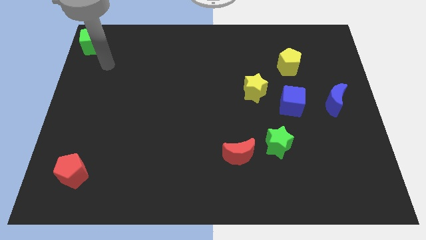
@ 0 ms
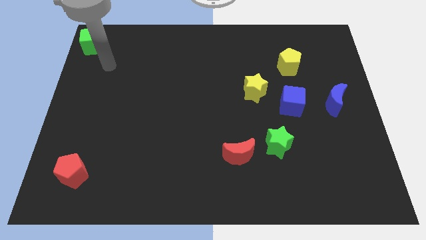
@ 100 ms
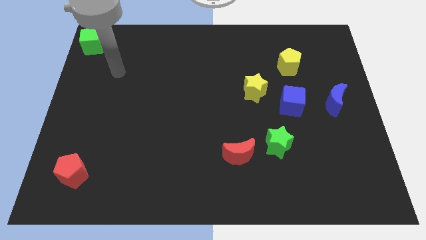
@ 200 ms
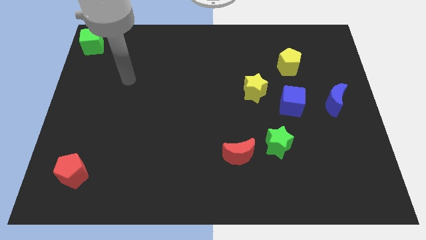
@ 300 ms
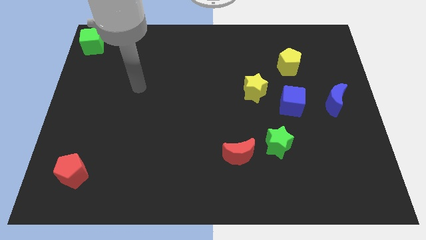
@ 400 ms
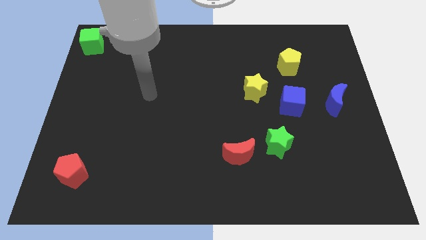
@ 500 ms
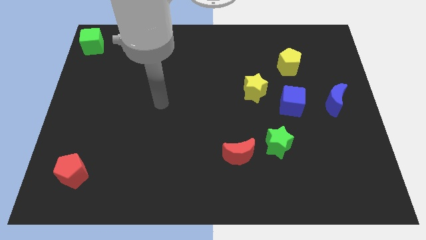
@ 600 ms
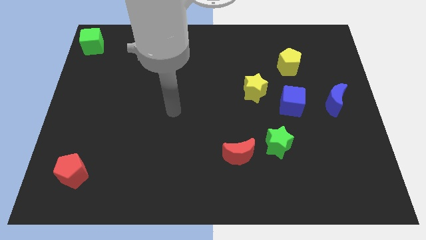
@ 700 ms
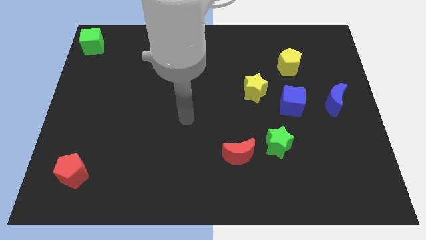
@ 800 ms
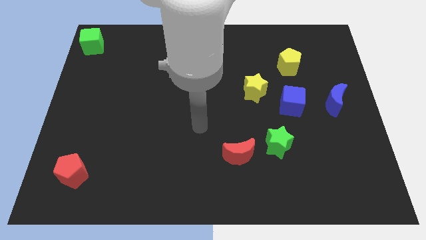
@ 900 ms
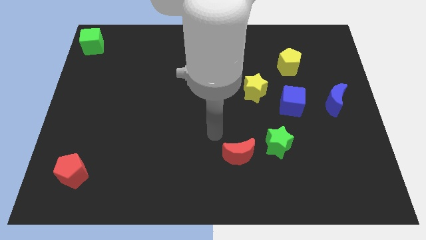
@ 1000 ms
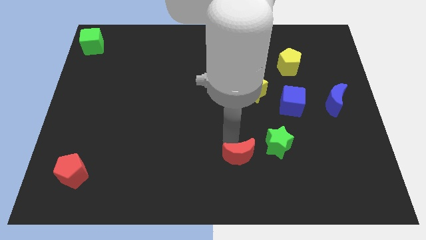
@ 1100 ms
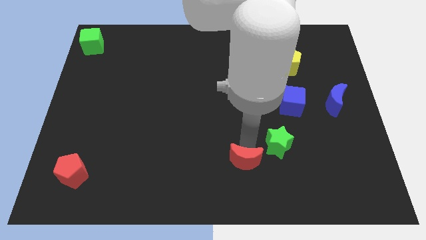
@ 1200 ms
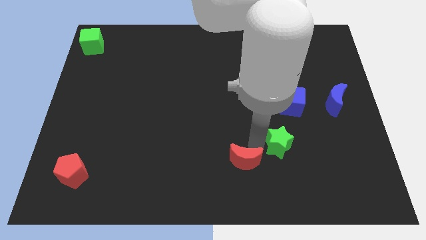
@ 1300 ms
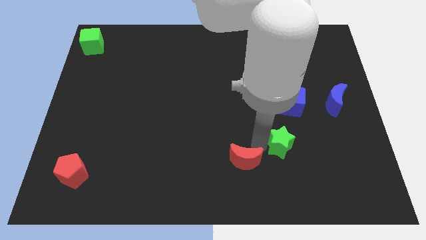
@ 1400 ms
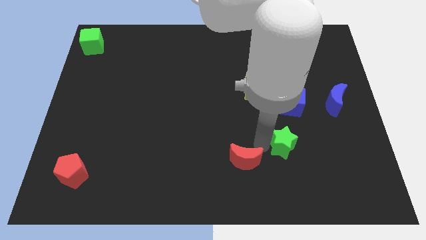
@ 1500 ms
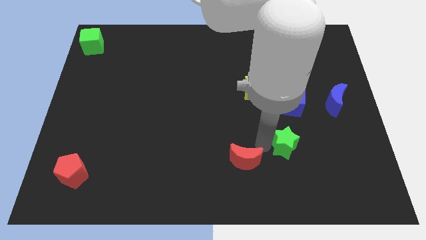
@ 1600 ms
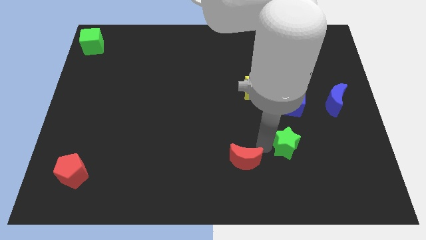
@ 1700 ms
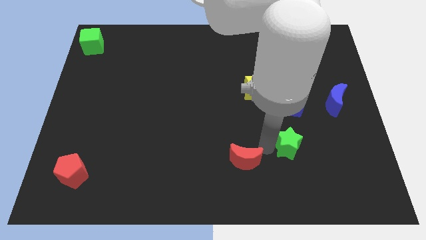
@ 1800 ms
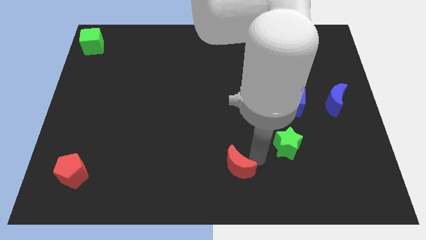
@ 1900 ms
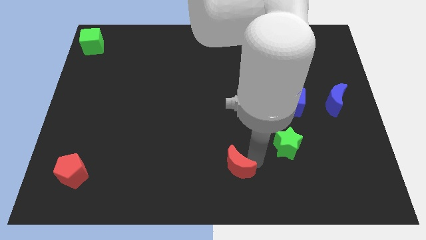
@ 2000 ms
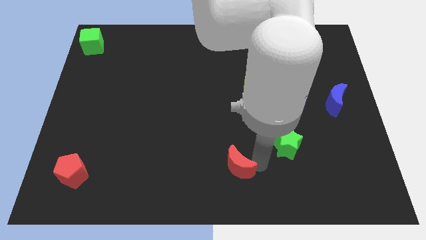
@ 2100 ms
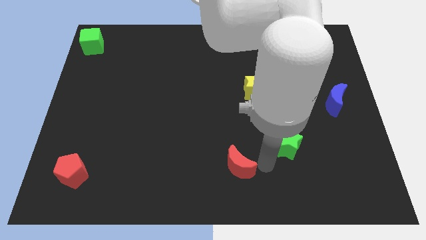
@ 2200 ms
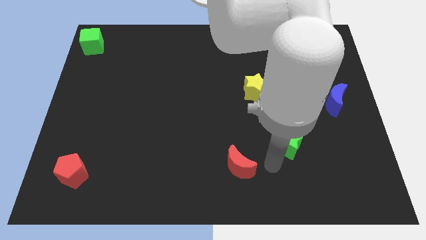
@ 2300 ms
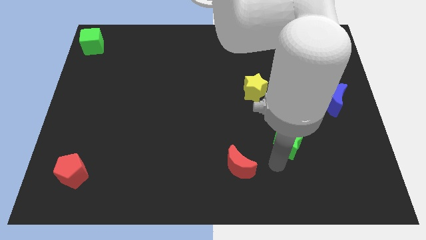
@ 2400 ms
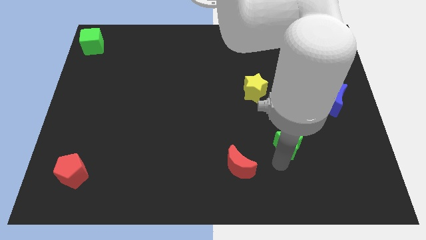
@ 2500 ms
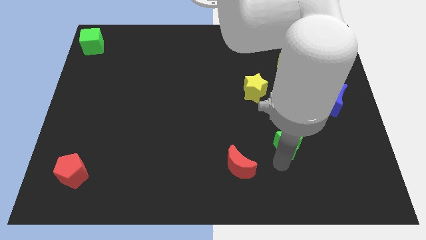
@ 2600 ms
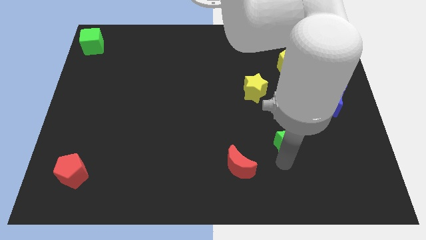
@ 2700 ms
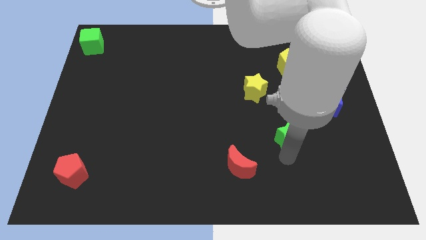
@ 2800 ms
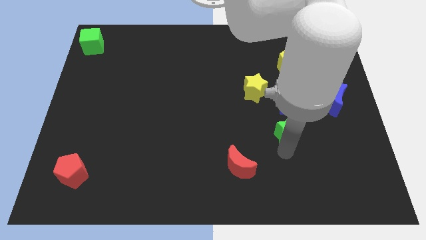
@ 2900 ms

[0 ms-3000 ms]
push the green star to the bottom of the blue cube

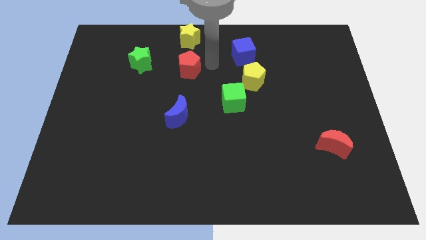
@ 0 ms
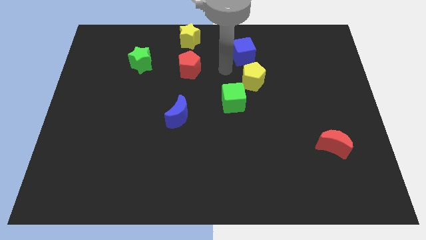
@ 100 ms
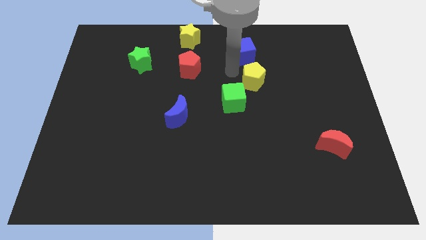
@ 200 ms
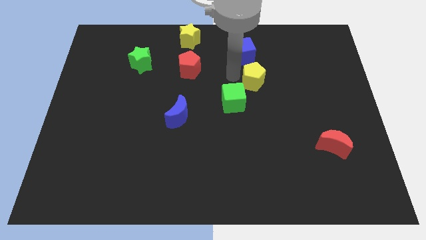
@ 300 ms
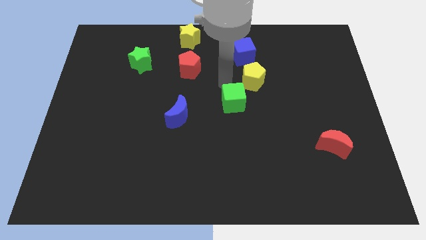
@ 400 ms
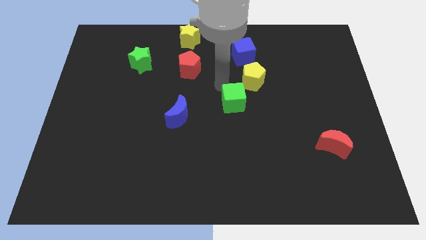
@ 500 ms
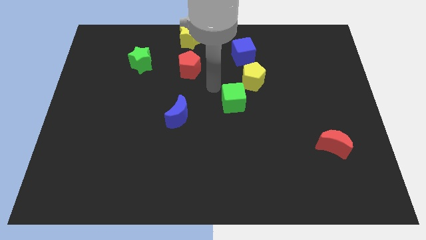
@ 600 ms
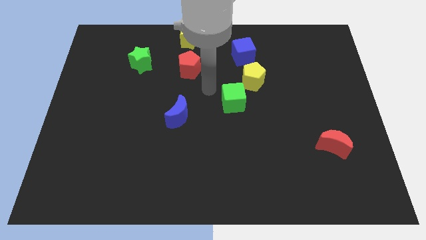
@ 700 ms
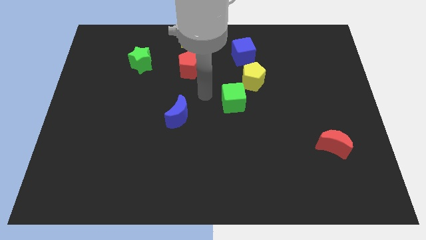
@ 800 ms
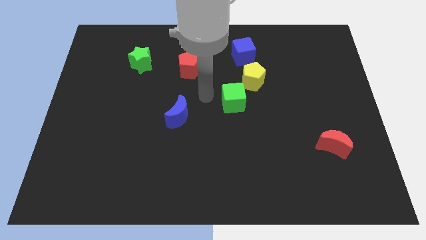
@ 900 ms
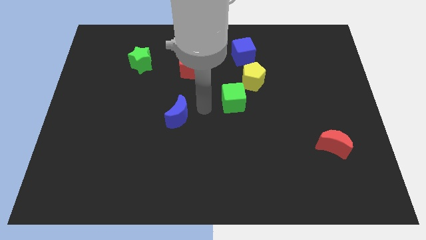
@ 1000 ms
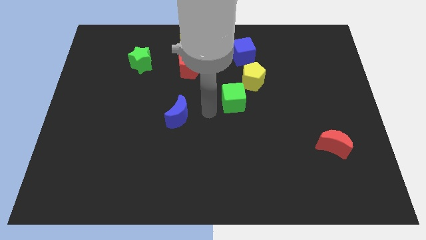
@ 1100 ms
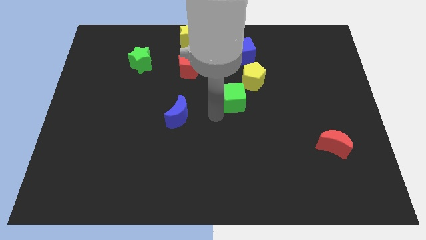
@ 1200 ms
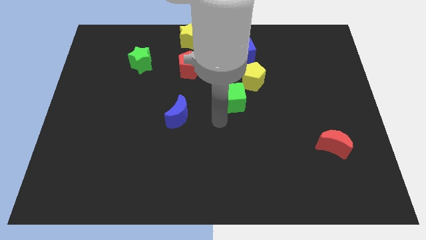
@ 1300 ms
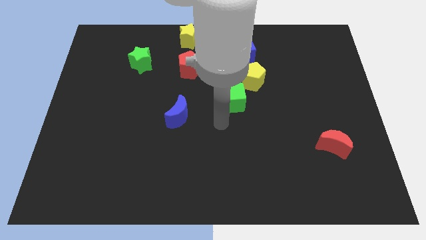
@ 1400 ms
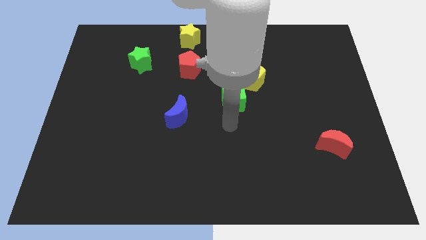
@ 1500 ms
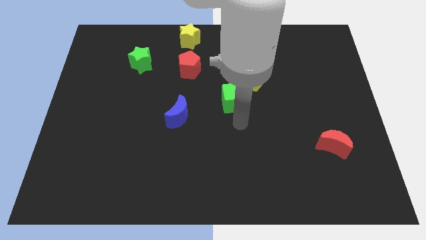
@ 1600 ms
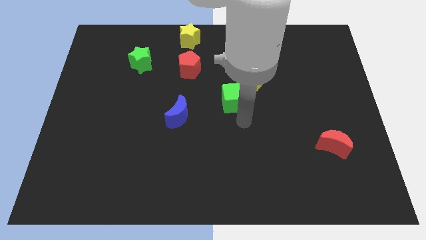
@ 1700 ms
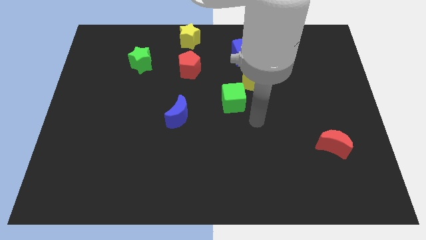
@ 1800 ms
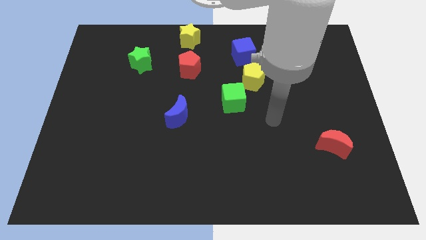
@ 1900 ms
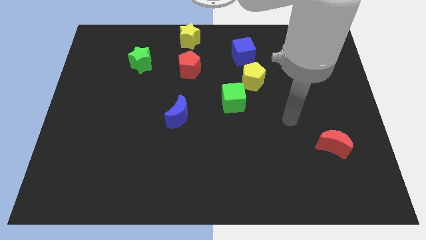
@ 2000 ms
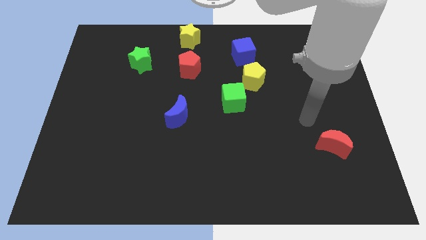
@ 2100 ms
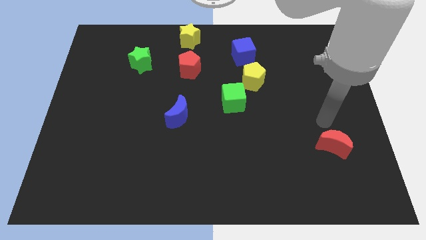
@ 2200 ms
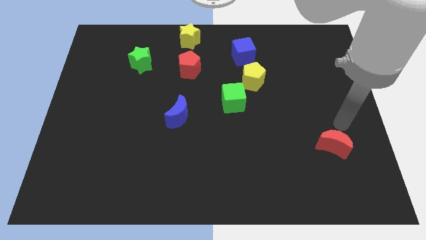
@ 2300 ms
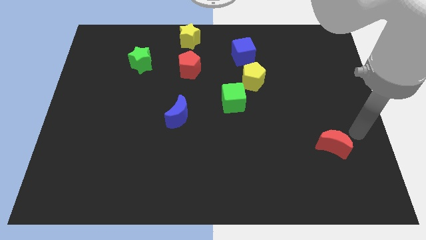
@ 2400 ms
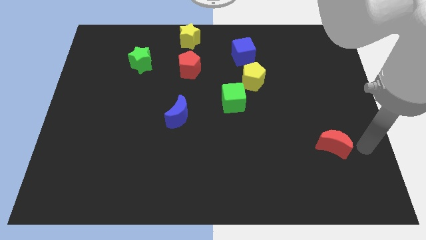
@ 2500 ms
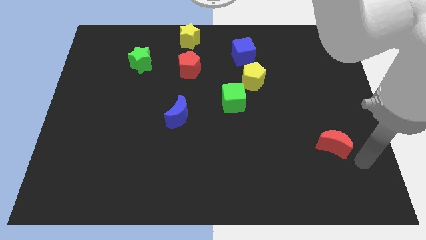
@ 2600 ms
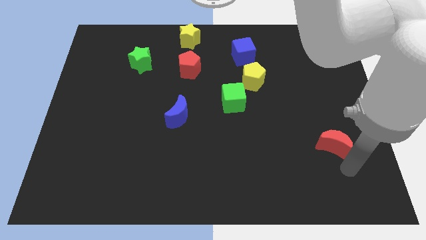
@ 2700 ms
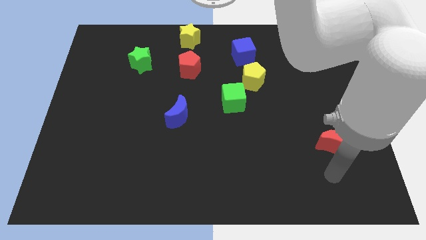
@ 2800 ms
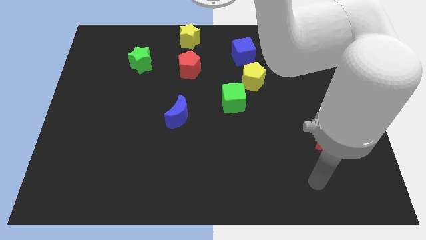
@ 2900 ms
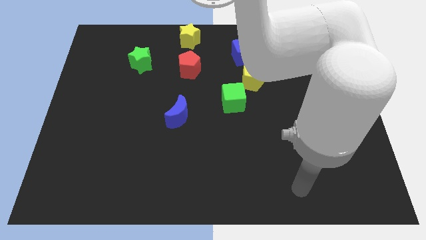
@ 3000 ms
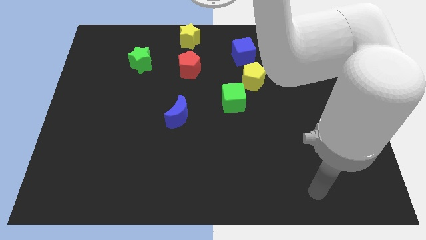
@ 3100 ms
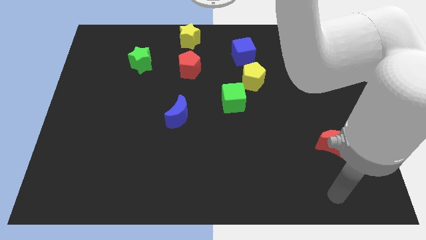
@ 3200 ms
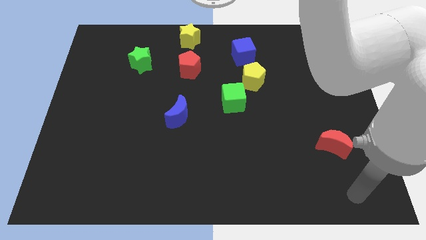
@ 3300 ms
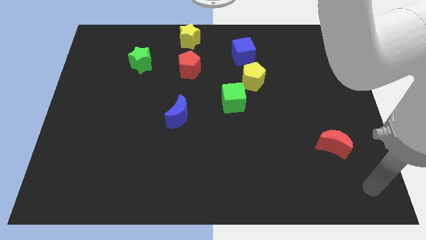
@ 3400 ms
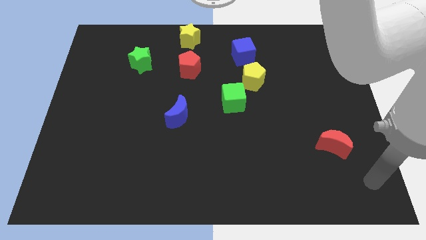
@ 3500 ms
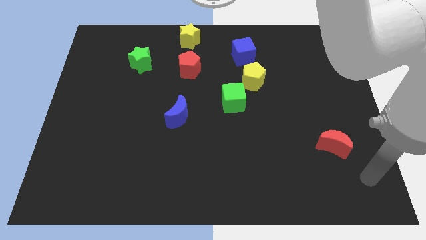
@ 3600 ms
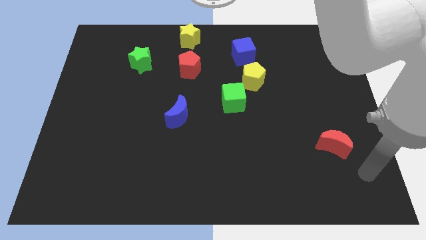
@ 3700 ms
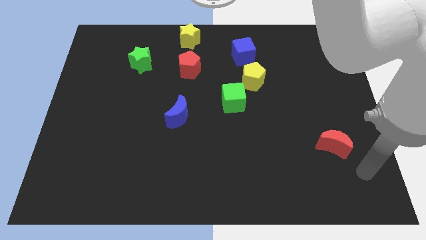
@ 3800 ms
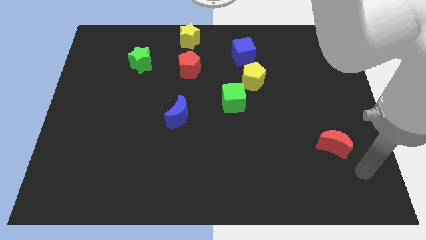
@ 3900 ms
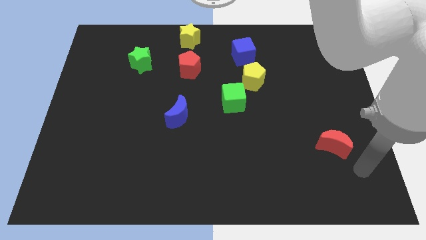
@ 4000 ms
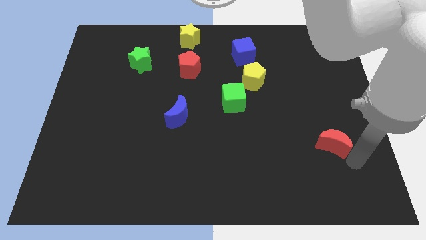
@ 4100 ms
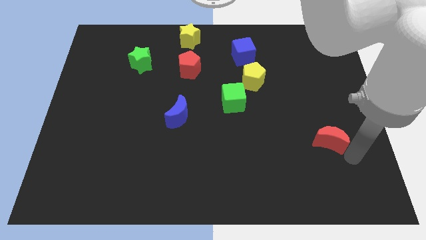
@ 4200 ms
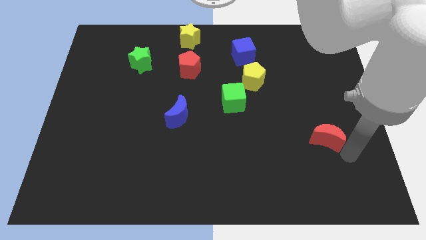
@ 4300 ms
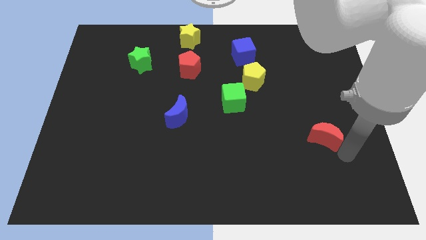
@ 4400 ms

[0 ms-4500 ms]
slightly push the red crescent to center

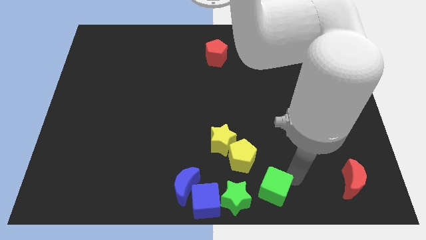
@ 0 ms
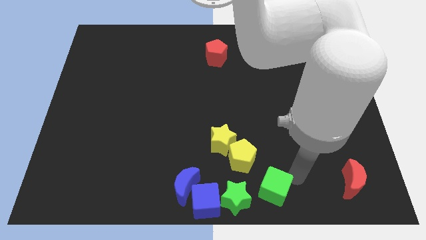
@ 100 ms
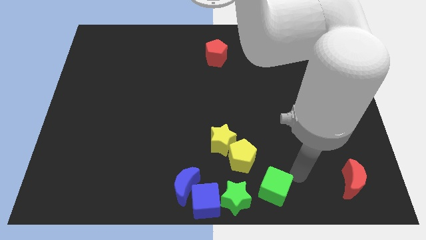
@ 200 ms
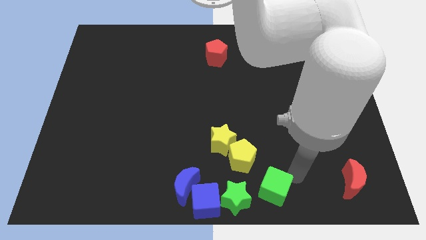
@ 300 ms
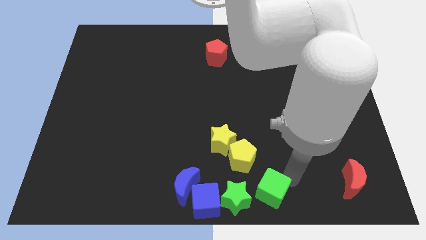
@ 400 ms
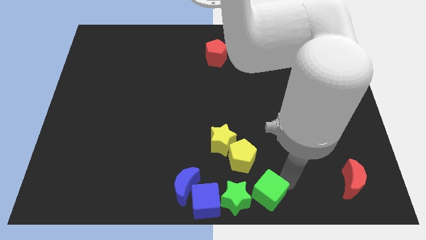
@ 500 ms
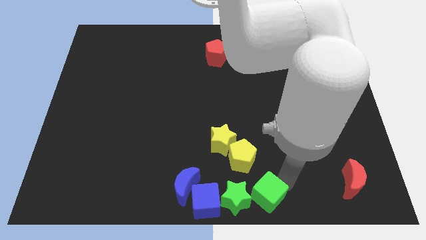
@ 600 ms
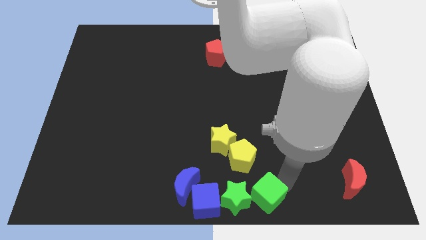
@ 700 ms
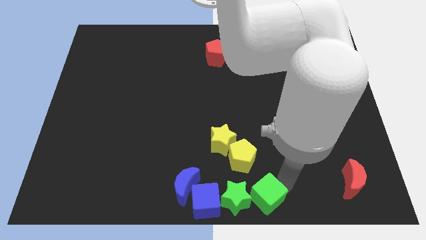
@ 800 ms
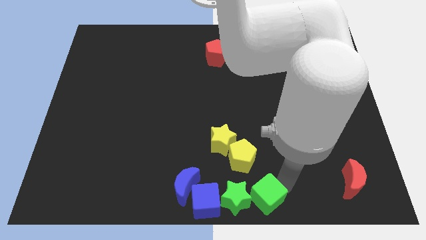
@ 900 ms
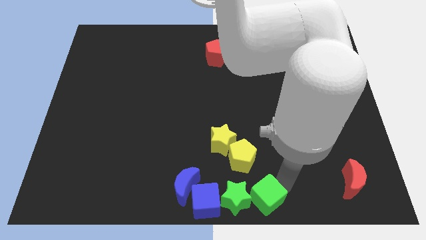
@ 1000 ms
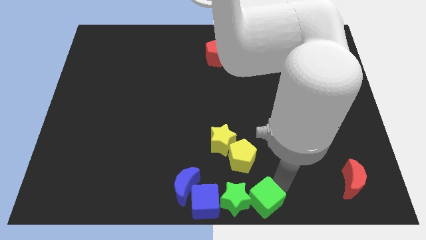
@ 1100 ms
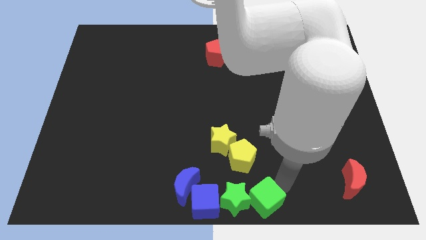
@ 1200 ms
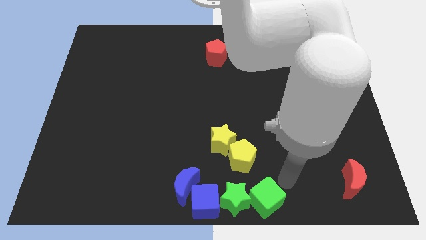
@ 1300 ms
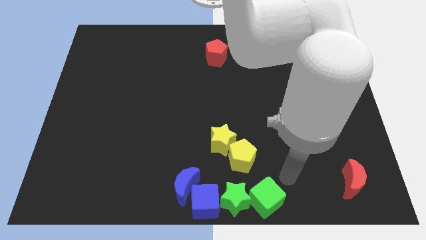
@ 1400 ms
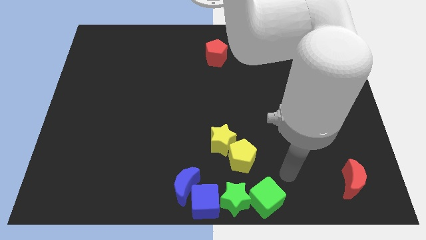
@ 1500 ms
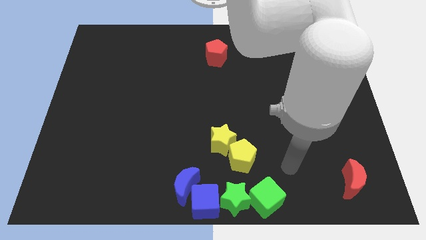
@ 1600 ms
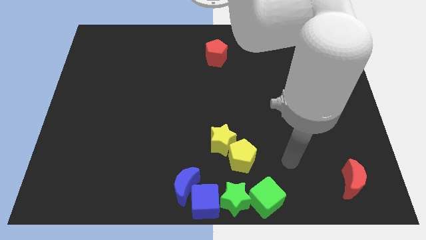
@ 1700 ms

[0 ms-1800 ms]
put green cube and green star together
